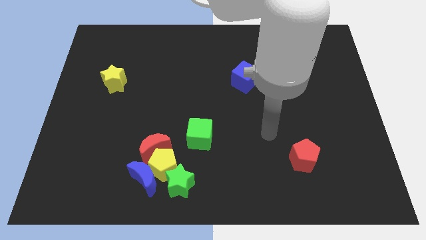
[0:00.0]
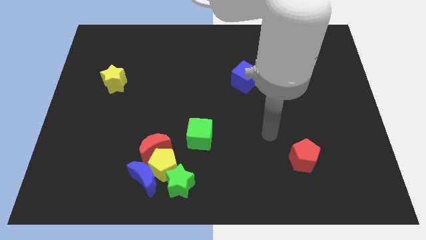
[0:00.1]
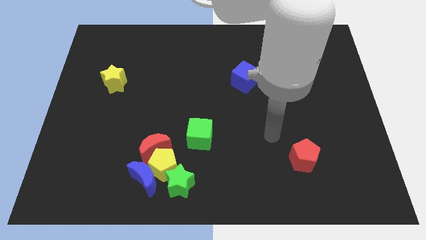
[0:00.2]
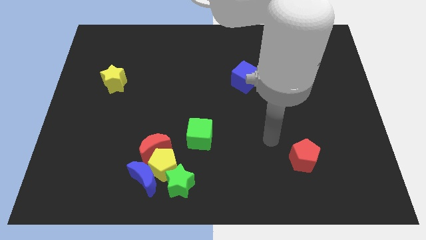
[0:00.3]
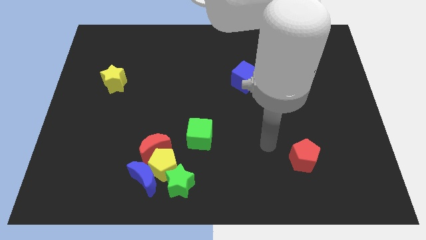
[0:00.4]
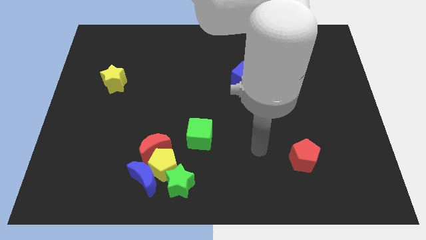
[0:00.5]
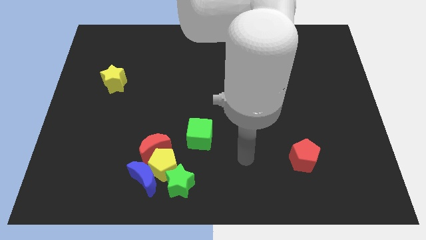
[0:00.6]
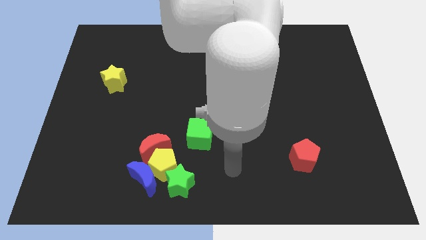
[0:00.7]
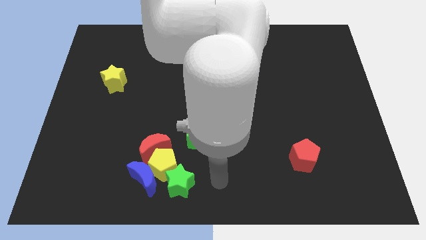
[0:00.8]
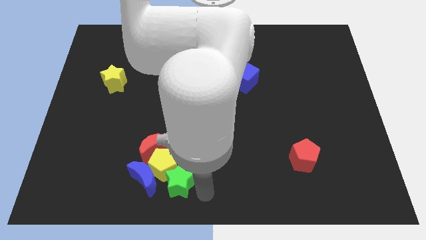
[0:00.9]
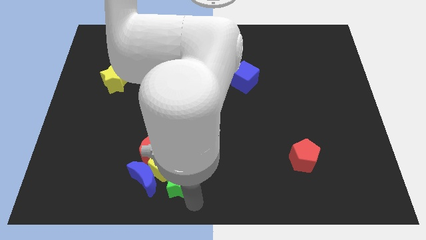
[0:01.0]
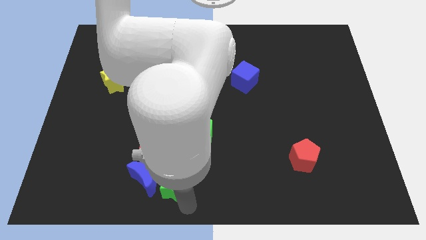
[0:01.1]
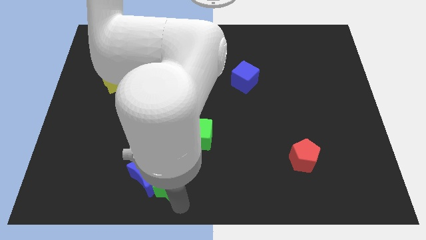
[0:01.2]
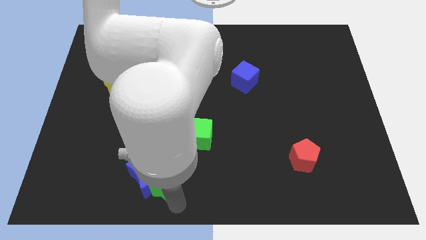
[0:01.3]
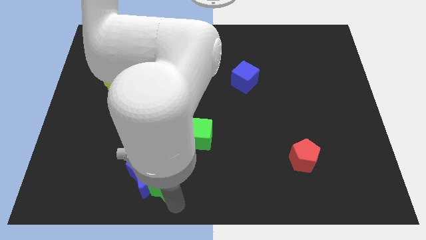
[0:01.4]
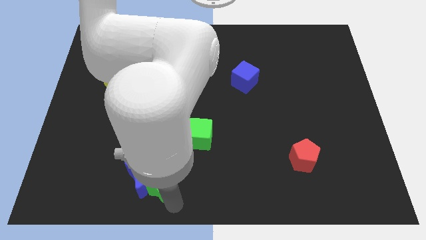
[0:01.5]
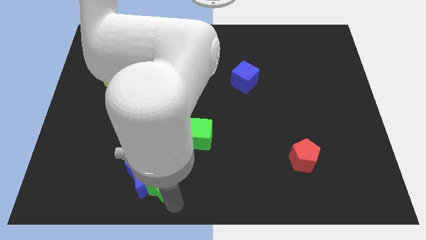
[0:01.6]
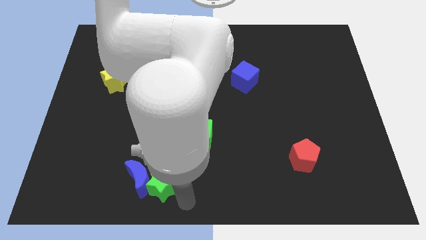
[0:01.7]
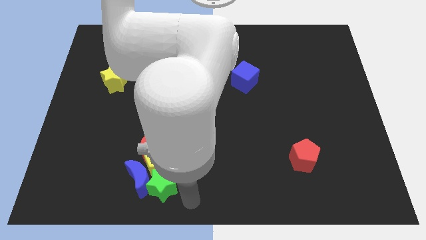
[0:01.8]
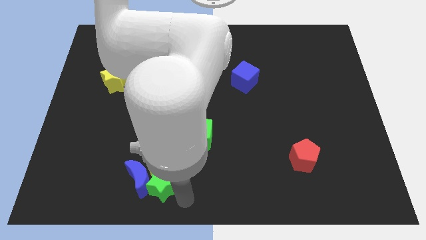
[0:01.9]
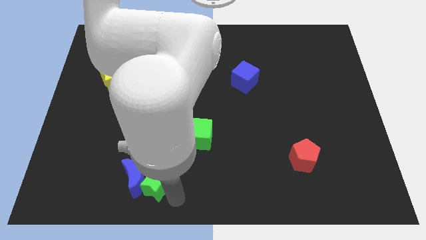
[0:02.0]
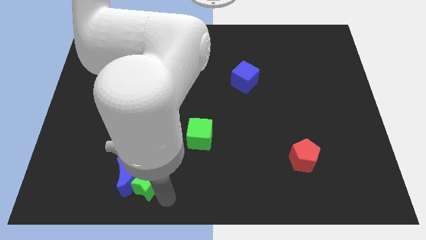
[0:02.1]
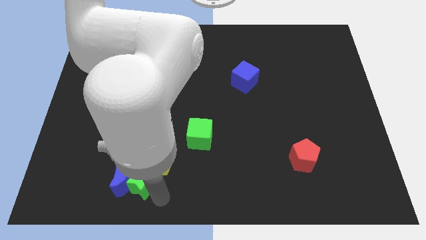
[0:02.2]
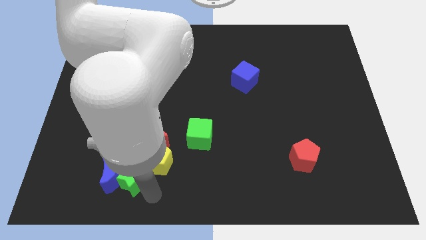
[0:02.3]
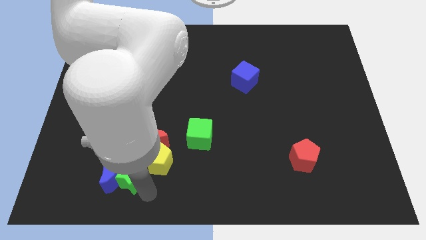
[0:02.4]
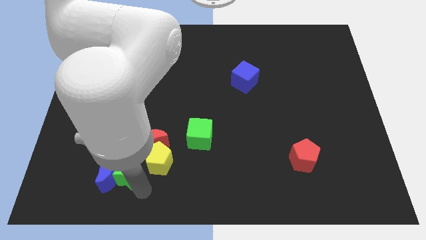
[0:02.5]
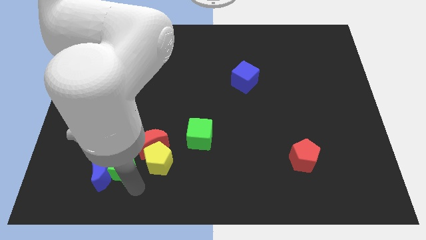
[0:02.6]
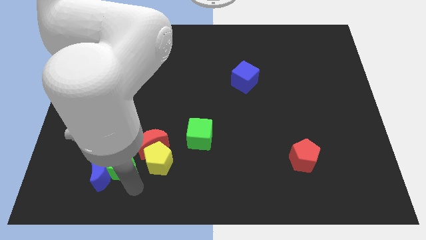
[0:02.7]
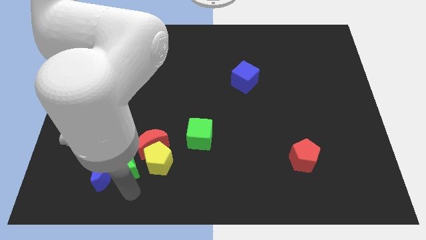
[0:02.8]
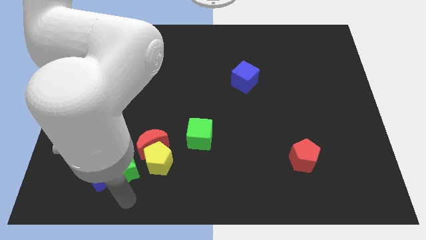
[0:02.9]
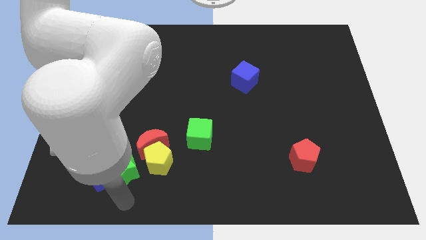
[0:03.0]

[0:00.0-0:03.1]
slide green star into blue moon

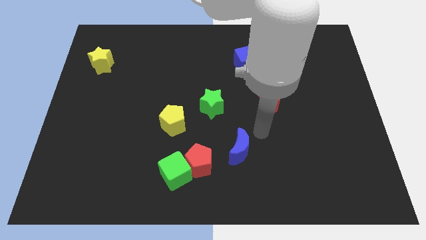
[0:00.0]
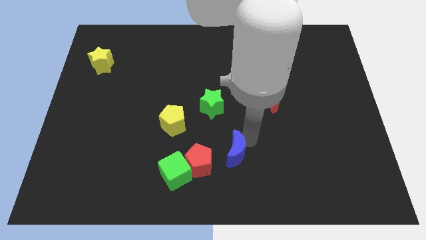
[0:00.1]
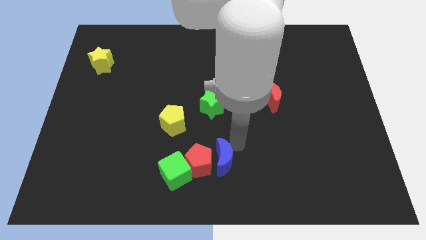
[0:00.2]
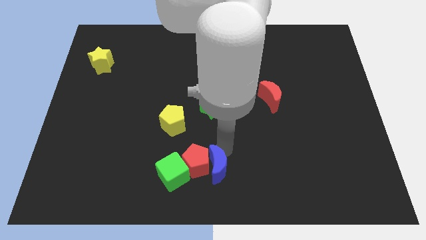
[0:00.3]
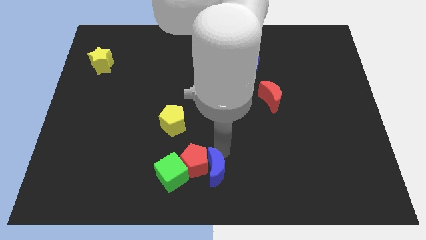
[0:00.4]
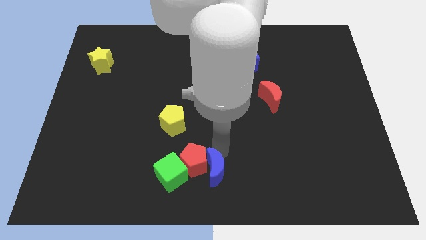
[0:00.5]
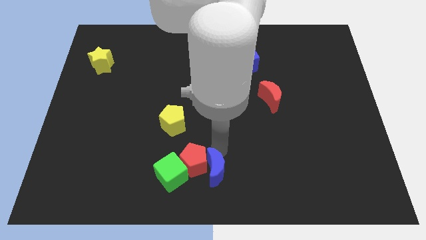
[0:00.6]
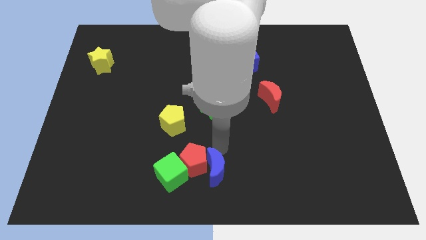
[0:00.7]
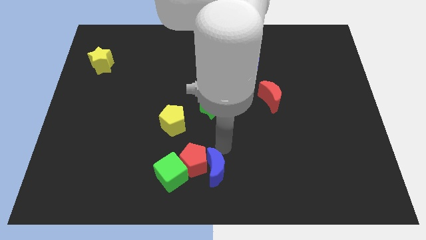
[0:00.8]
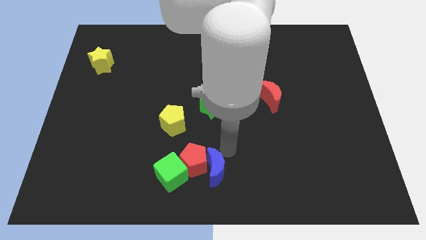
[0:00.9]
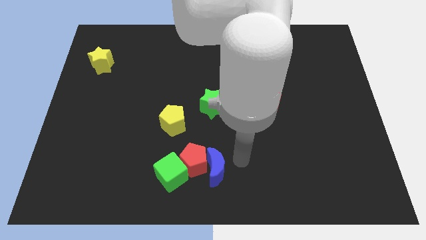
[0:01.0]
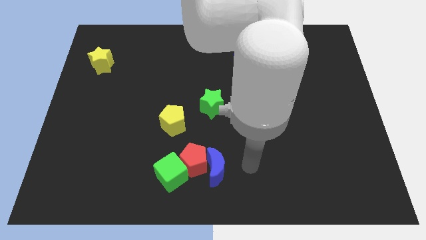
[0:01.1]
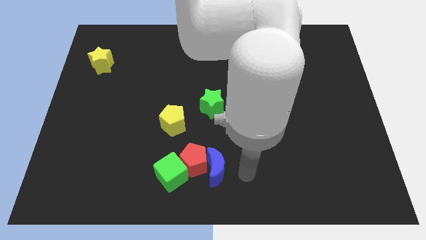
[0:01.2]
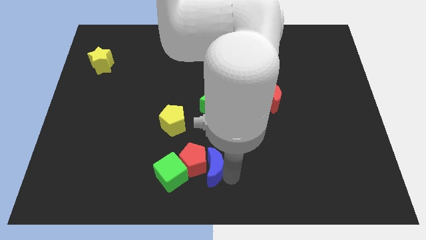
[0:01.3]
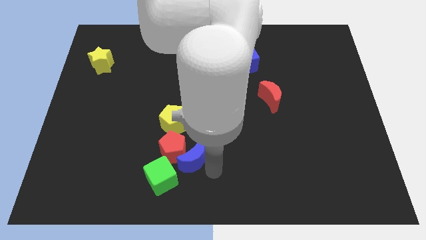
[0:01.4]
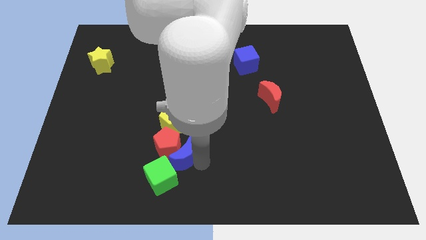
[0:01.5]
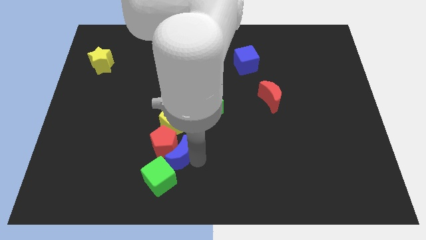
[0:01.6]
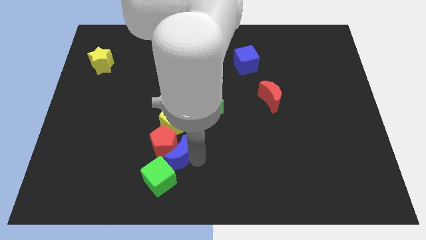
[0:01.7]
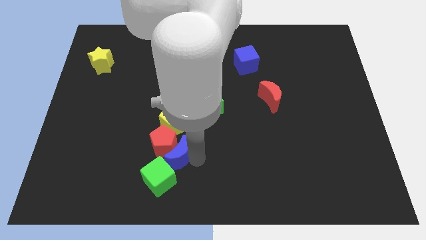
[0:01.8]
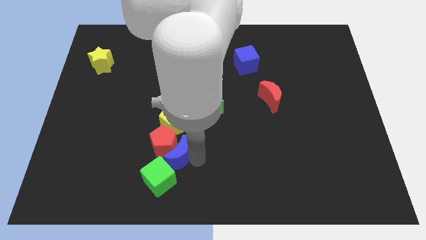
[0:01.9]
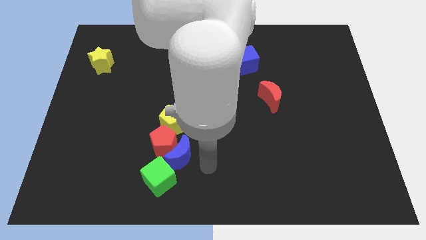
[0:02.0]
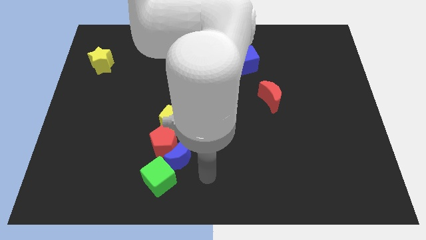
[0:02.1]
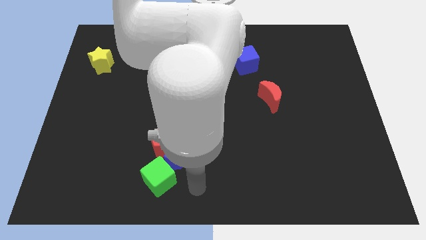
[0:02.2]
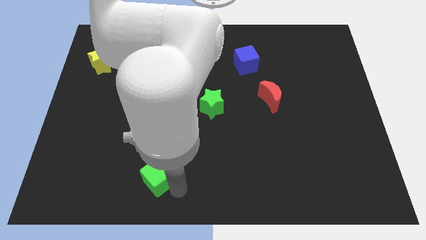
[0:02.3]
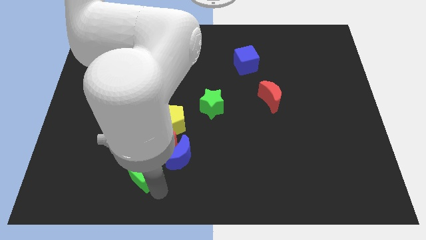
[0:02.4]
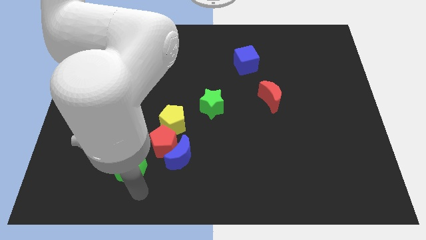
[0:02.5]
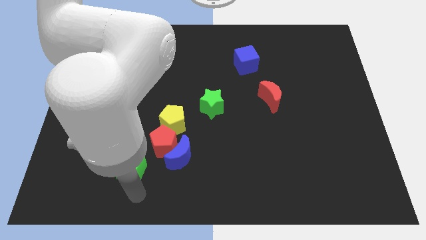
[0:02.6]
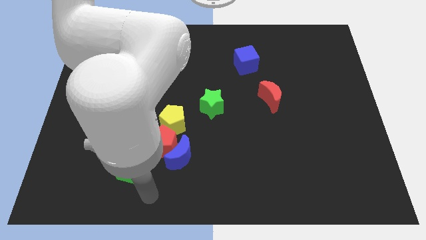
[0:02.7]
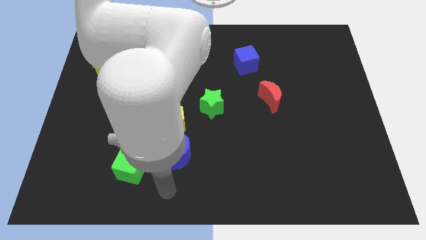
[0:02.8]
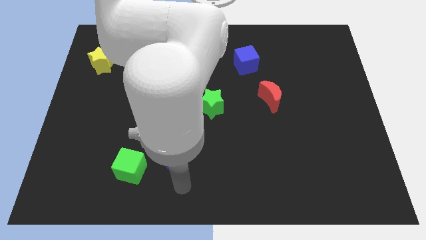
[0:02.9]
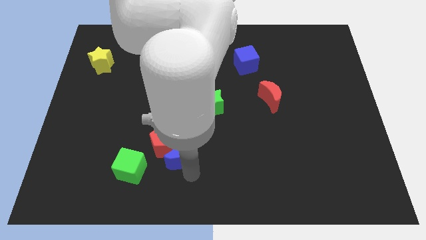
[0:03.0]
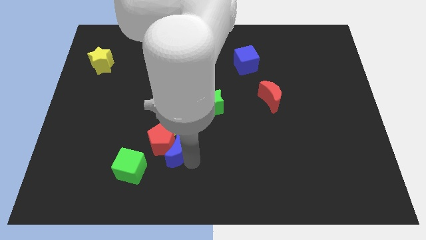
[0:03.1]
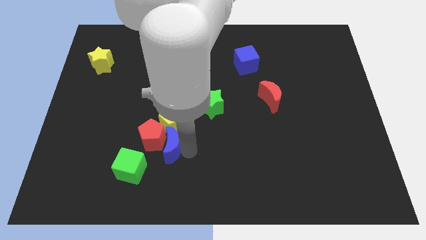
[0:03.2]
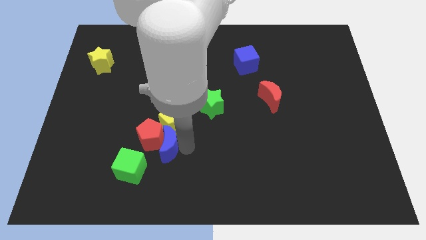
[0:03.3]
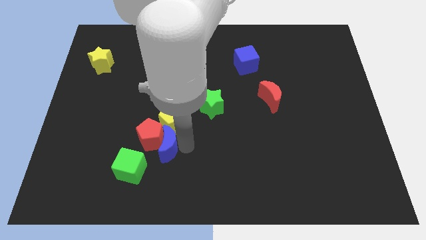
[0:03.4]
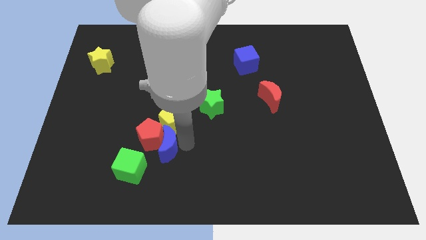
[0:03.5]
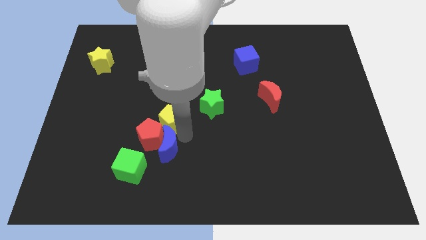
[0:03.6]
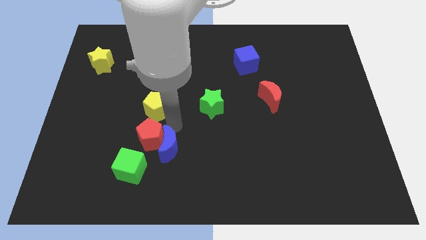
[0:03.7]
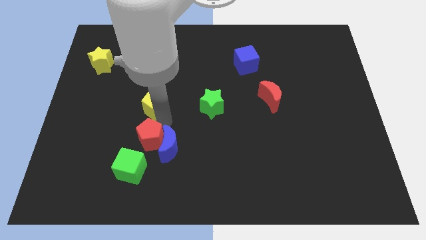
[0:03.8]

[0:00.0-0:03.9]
form a vertical line with the green cube red pentagon and yellow pentagon

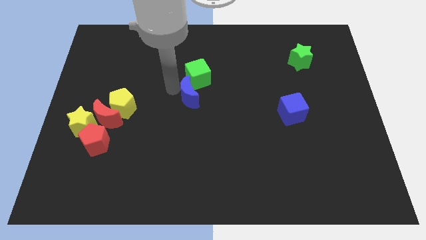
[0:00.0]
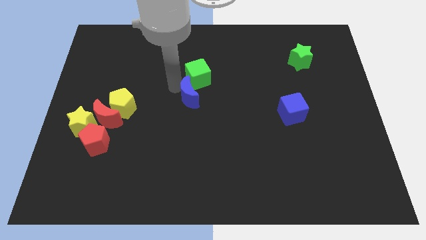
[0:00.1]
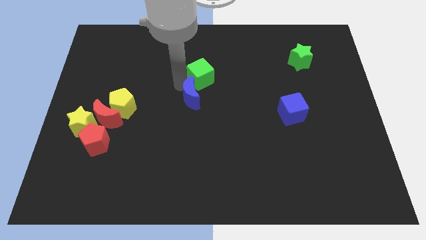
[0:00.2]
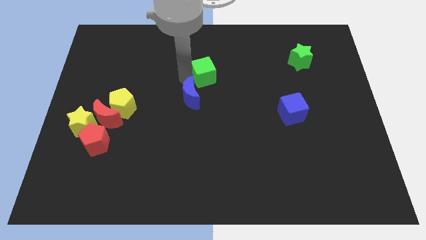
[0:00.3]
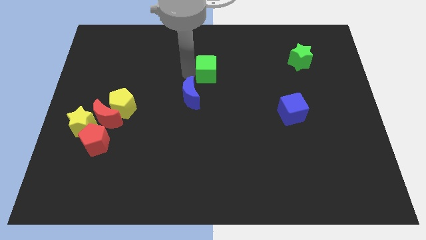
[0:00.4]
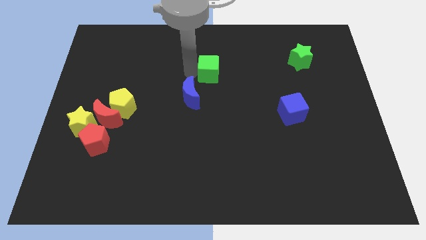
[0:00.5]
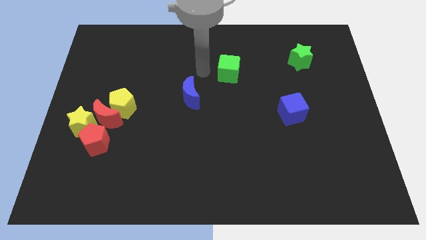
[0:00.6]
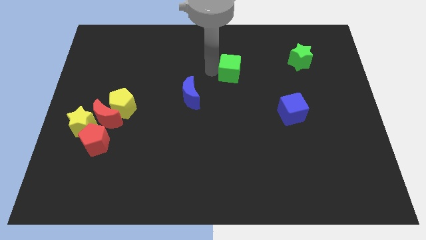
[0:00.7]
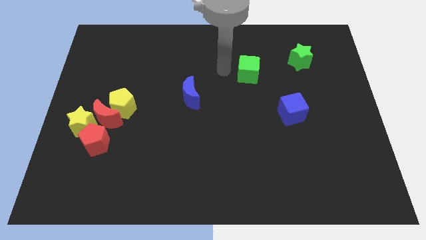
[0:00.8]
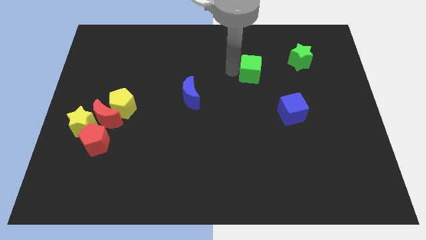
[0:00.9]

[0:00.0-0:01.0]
push the green cube away from the blue moon

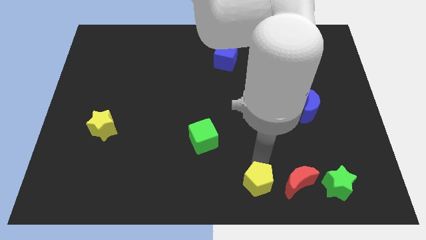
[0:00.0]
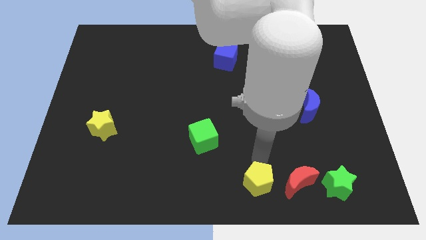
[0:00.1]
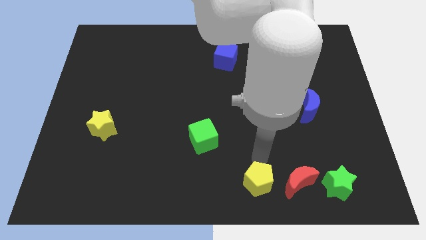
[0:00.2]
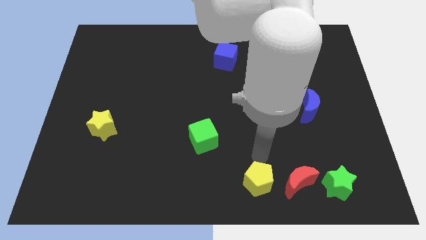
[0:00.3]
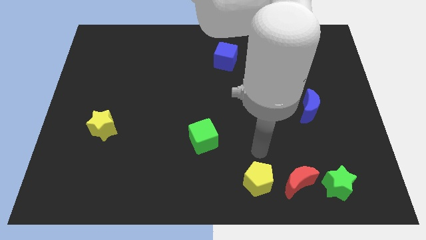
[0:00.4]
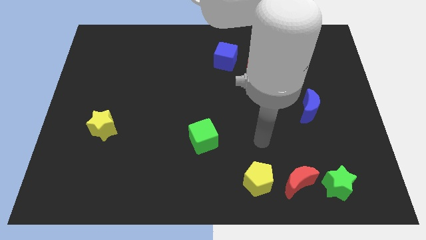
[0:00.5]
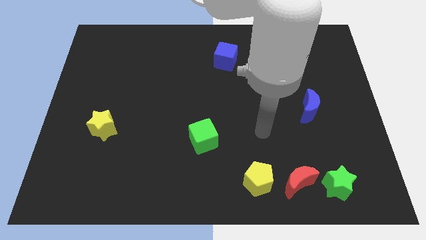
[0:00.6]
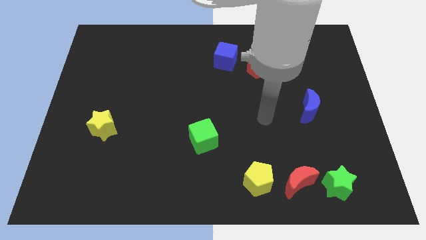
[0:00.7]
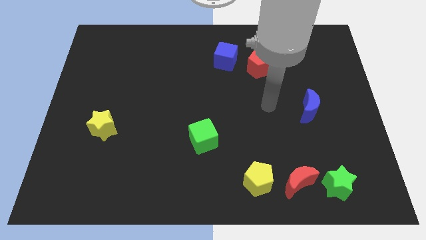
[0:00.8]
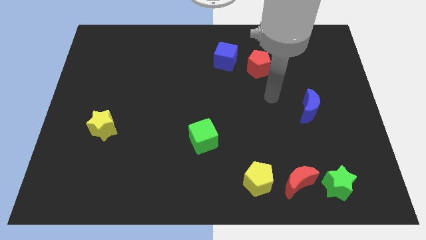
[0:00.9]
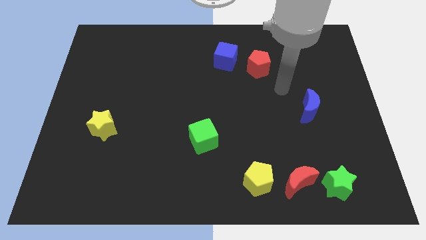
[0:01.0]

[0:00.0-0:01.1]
move the arm away from the yellow pentagon
